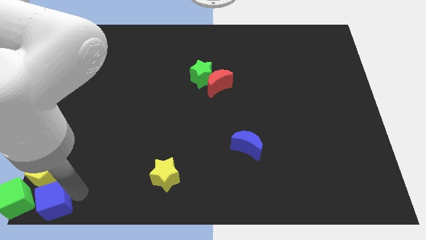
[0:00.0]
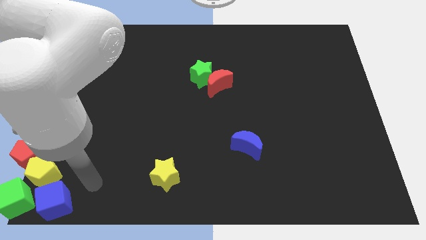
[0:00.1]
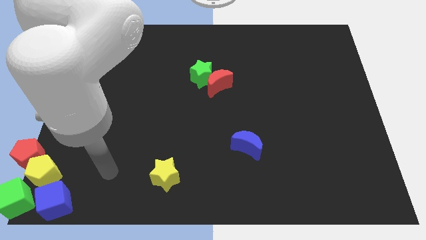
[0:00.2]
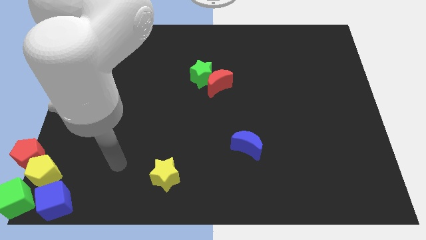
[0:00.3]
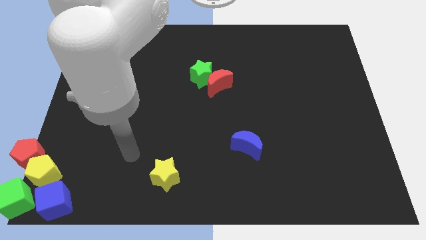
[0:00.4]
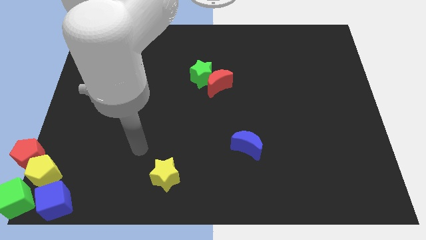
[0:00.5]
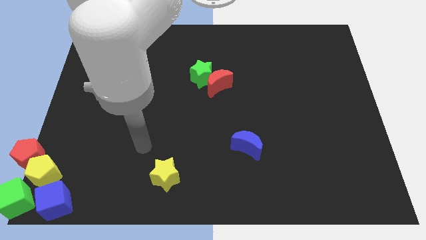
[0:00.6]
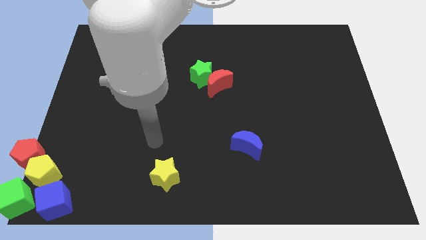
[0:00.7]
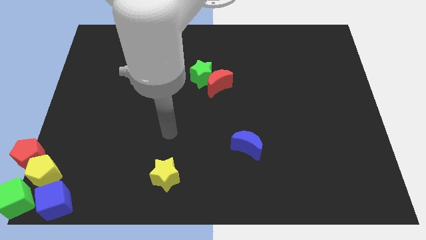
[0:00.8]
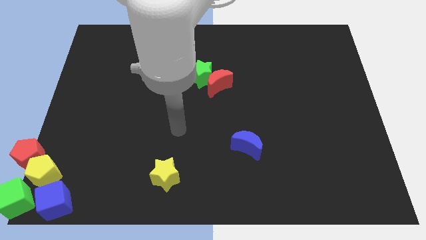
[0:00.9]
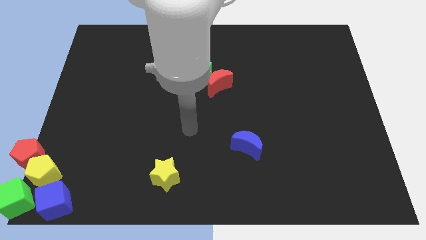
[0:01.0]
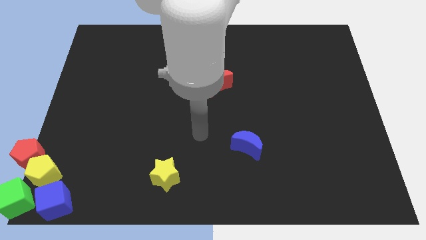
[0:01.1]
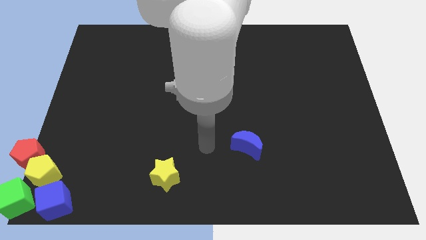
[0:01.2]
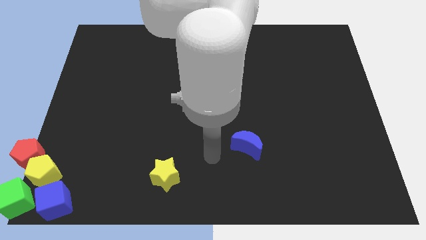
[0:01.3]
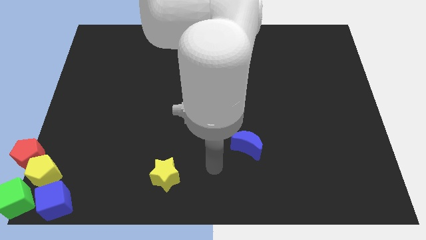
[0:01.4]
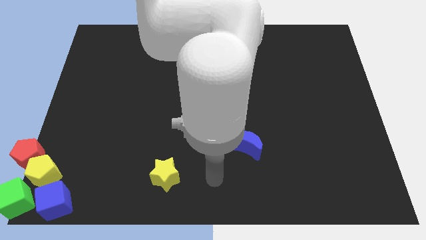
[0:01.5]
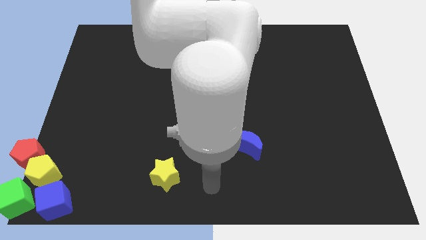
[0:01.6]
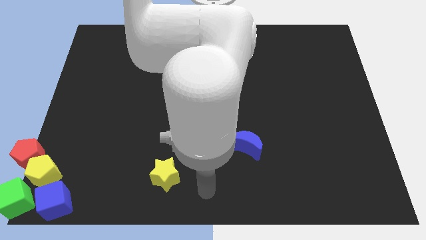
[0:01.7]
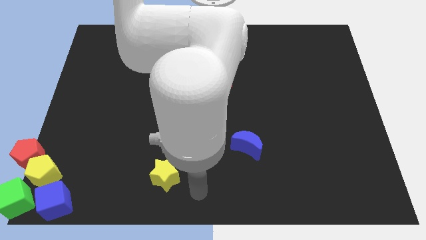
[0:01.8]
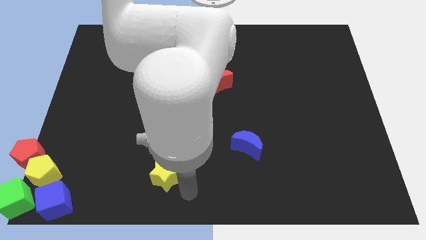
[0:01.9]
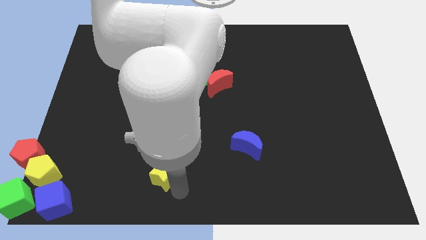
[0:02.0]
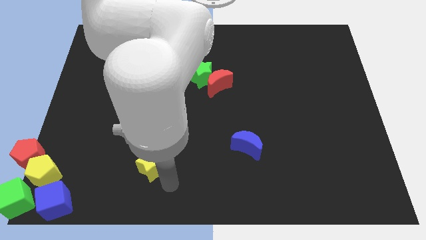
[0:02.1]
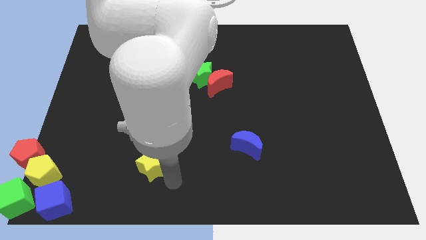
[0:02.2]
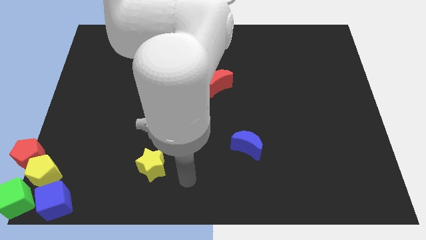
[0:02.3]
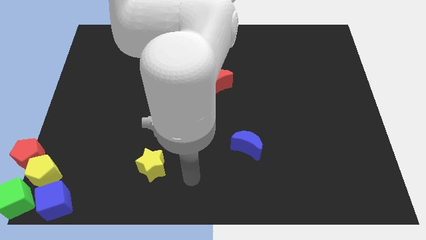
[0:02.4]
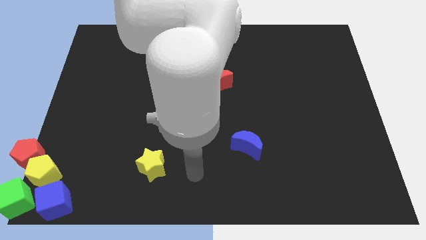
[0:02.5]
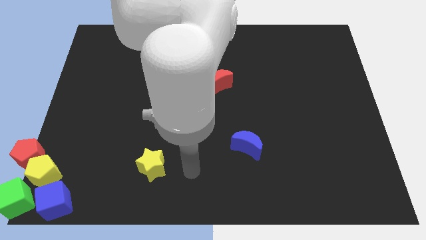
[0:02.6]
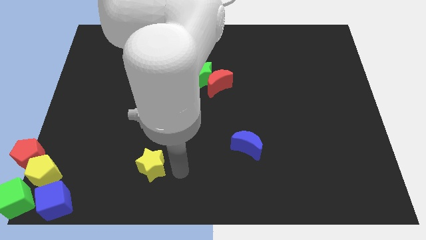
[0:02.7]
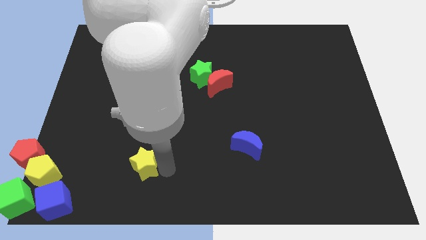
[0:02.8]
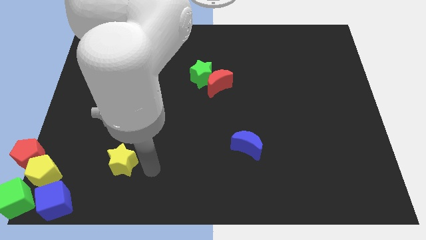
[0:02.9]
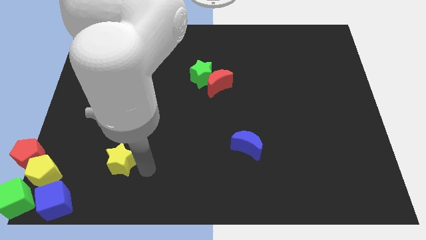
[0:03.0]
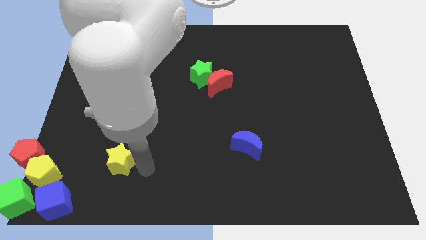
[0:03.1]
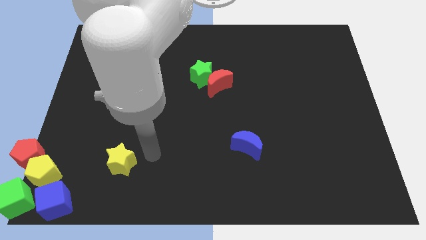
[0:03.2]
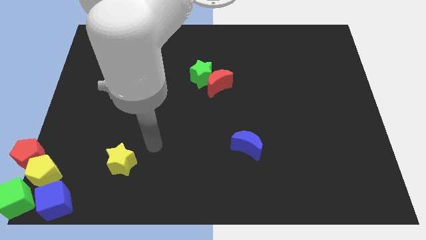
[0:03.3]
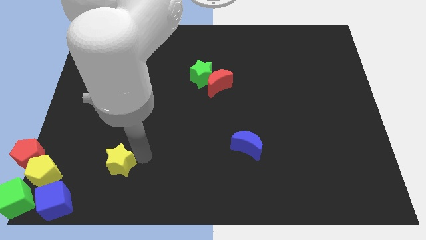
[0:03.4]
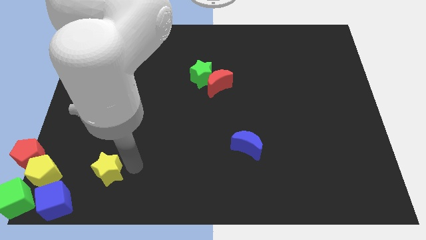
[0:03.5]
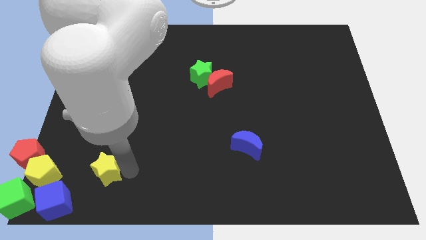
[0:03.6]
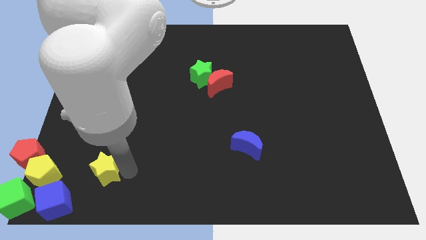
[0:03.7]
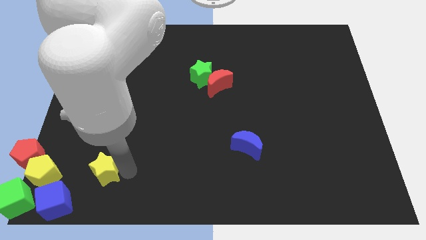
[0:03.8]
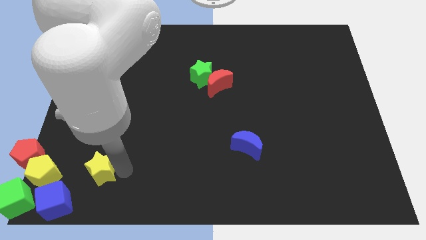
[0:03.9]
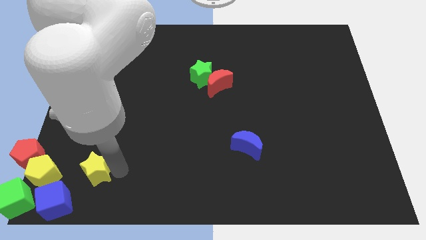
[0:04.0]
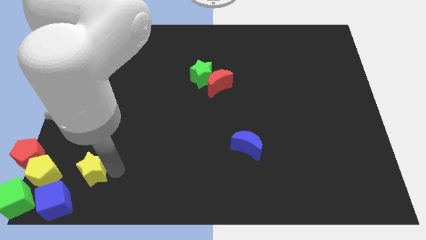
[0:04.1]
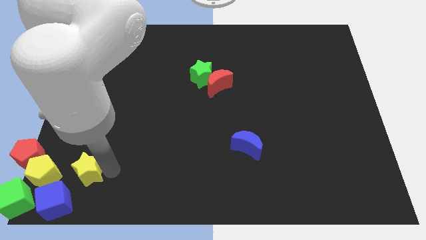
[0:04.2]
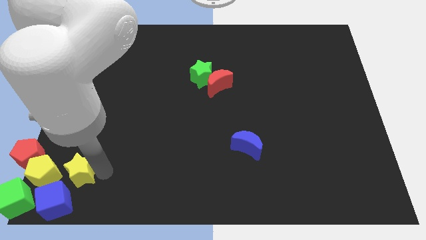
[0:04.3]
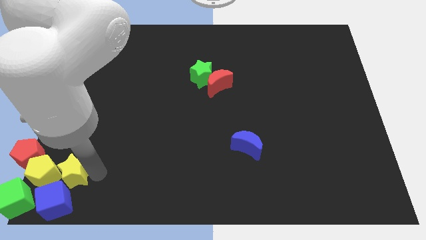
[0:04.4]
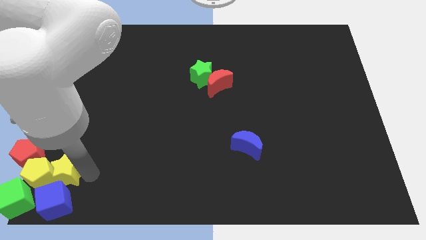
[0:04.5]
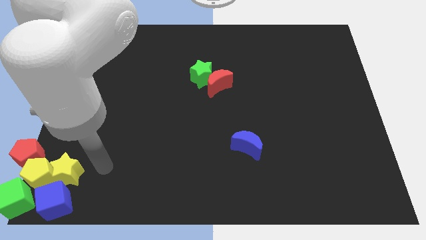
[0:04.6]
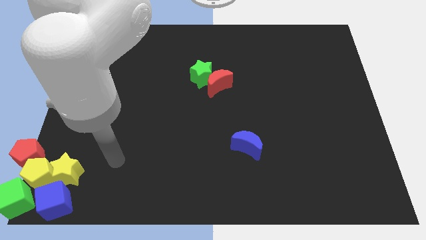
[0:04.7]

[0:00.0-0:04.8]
push the yellow star into the yellow pentagon

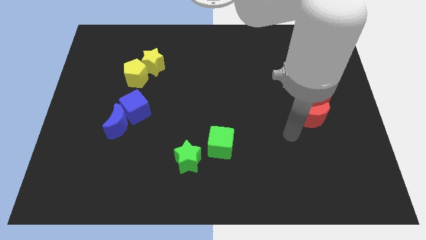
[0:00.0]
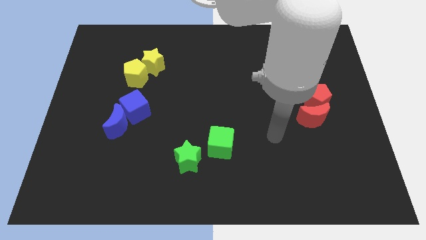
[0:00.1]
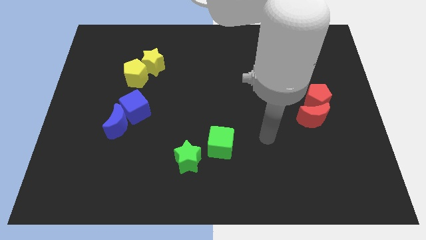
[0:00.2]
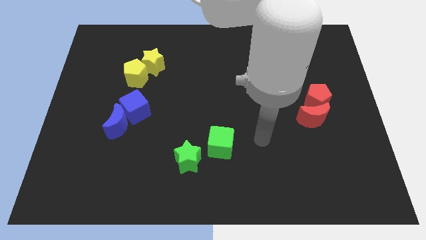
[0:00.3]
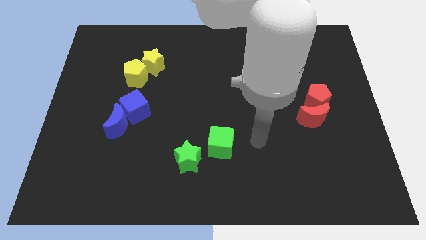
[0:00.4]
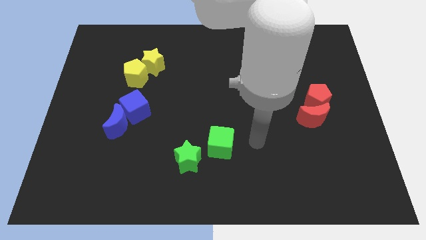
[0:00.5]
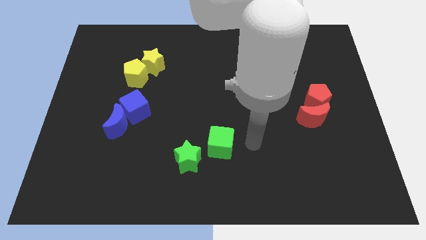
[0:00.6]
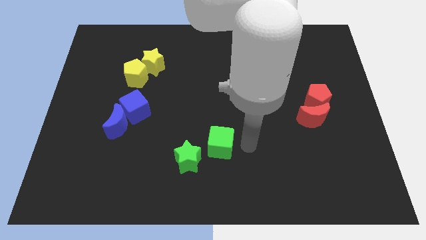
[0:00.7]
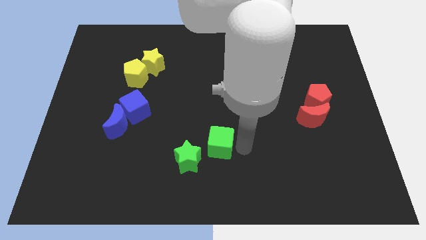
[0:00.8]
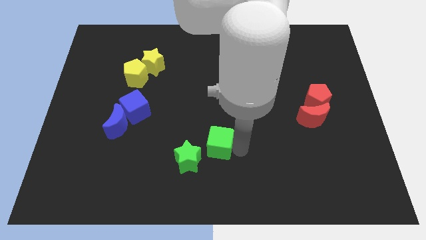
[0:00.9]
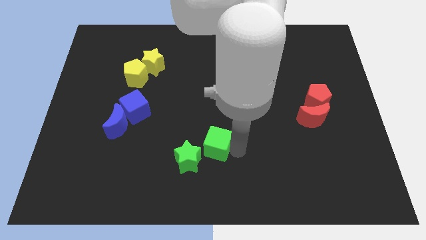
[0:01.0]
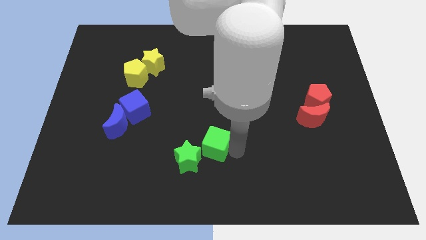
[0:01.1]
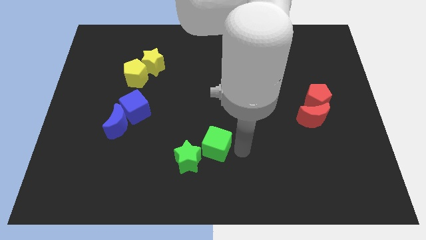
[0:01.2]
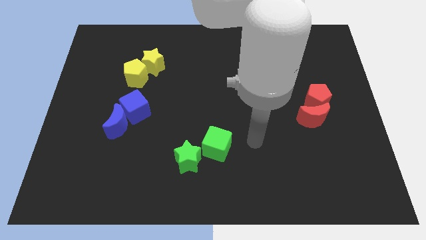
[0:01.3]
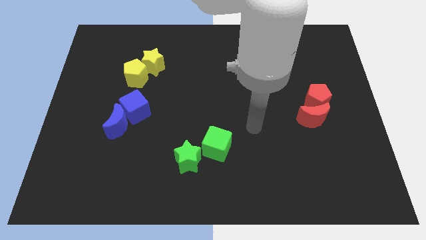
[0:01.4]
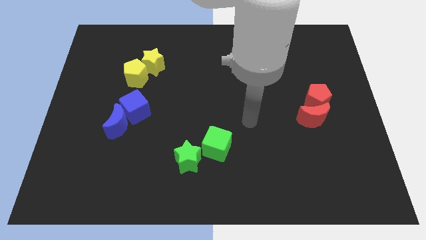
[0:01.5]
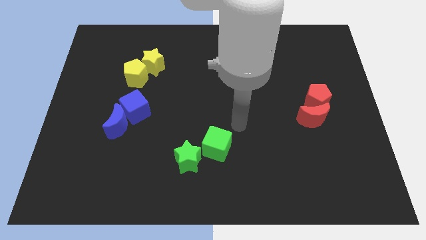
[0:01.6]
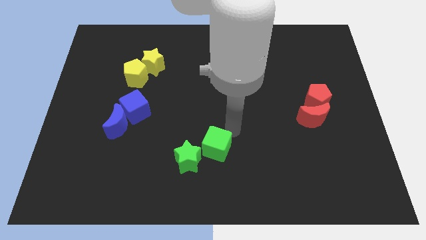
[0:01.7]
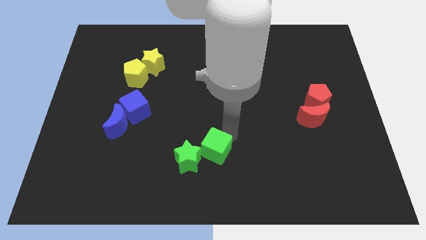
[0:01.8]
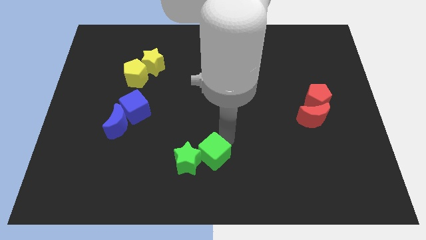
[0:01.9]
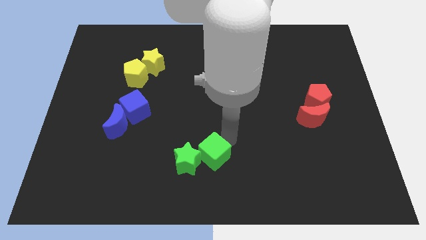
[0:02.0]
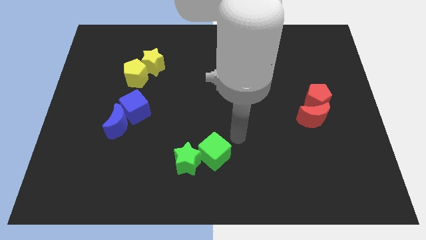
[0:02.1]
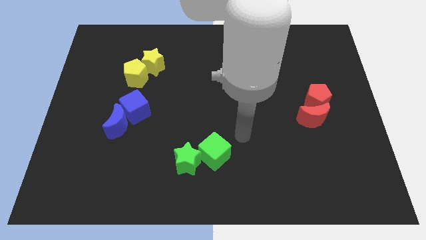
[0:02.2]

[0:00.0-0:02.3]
push the green cube into green star

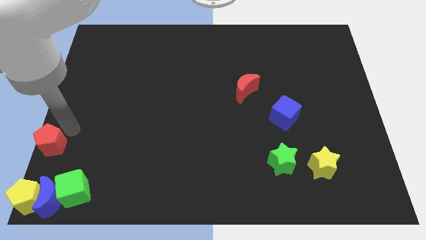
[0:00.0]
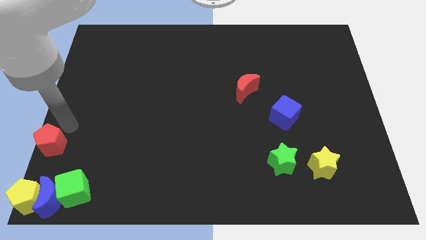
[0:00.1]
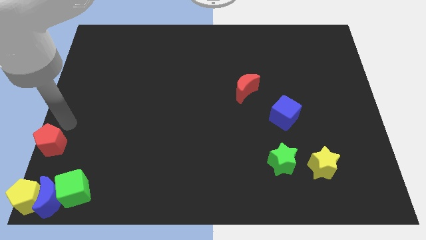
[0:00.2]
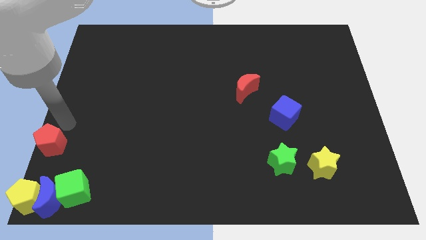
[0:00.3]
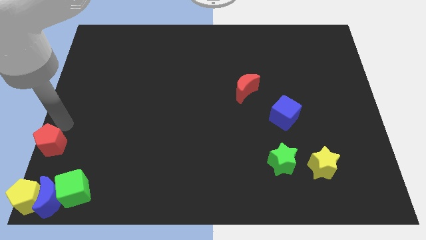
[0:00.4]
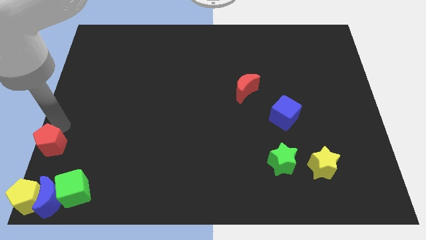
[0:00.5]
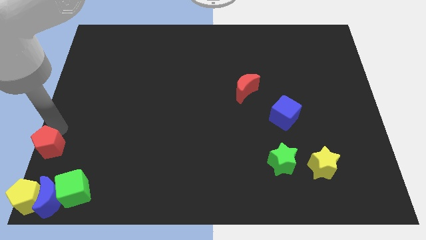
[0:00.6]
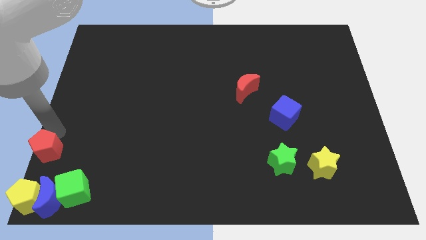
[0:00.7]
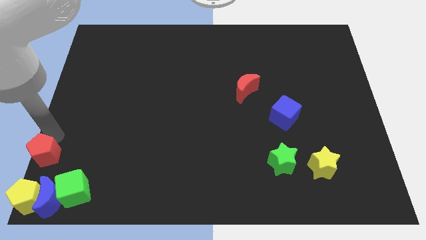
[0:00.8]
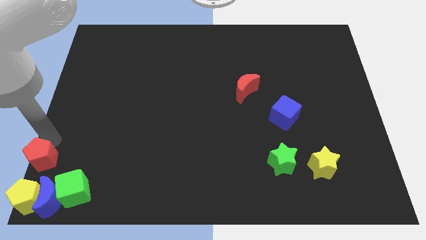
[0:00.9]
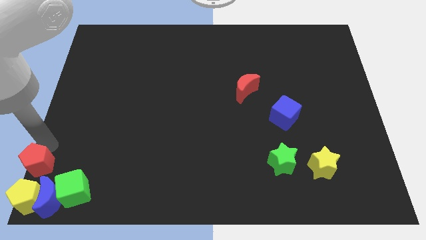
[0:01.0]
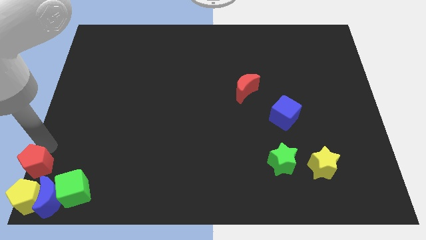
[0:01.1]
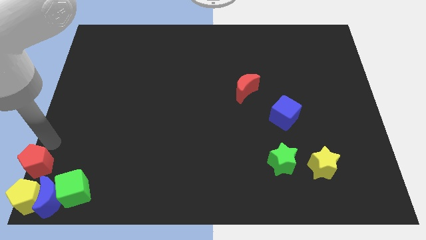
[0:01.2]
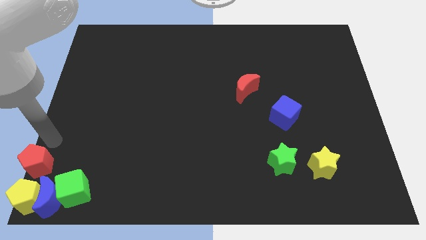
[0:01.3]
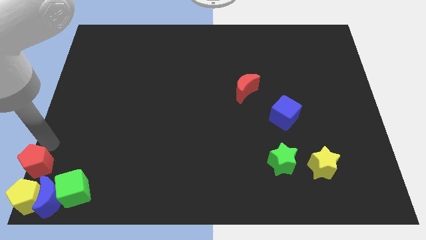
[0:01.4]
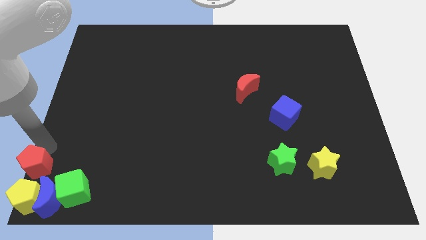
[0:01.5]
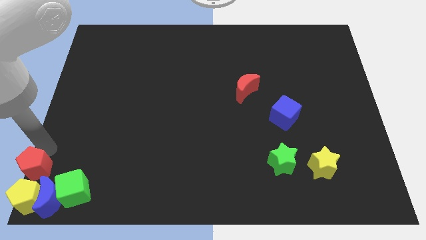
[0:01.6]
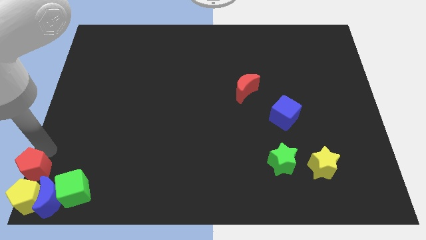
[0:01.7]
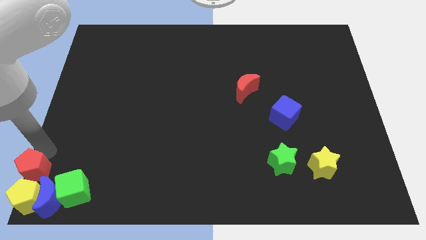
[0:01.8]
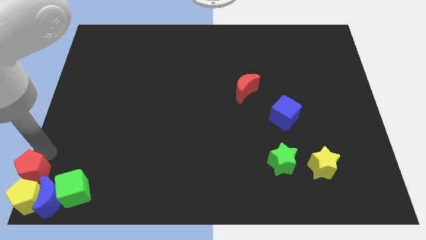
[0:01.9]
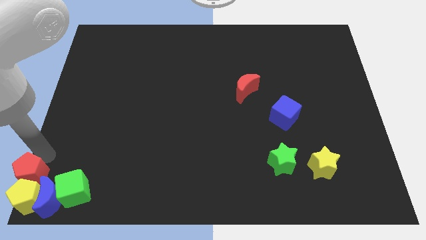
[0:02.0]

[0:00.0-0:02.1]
move red pentagon into yellow pentagon
